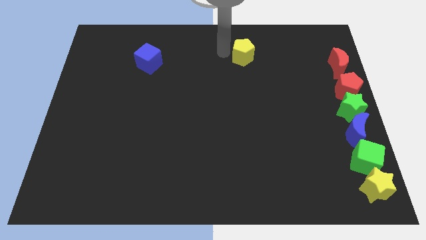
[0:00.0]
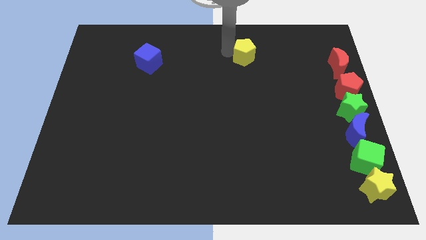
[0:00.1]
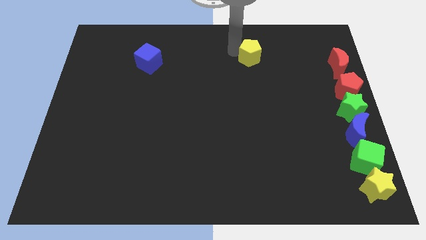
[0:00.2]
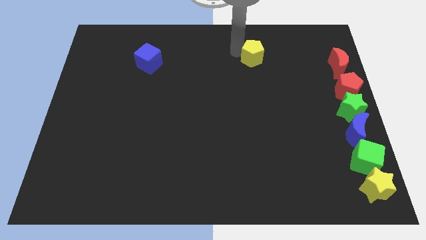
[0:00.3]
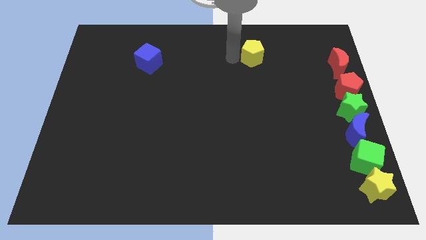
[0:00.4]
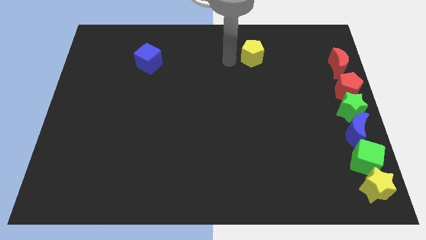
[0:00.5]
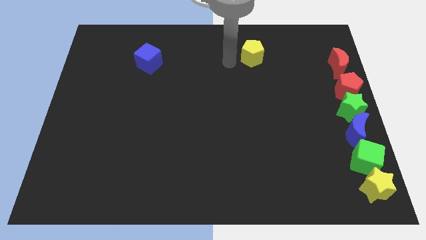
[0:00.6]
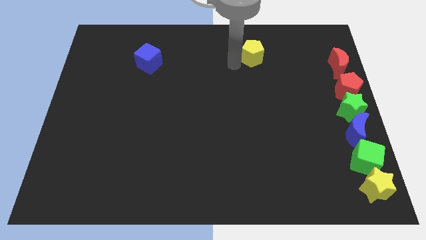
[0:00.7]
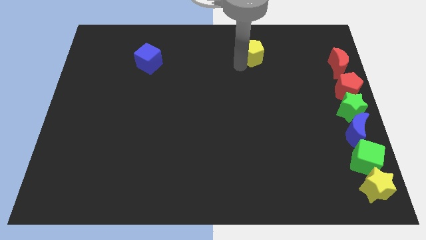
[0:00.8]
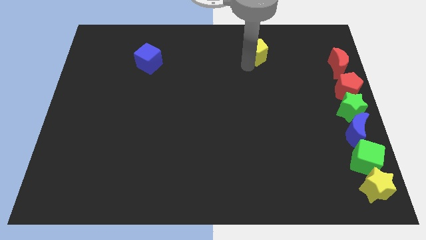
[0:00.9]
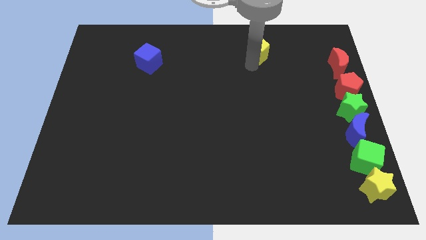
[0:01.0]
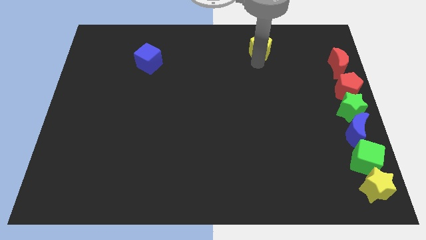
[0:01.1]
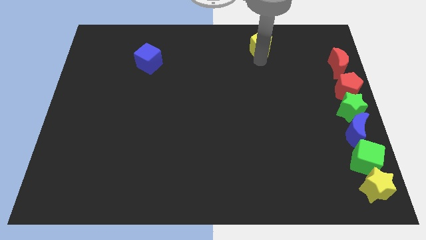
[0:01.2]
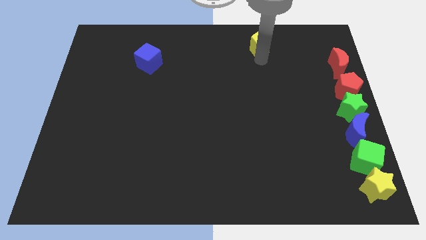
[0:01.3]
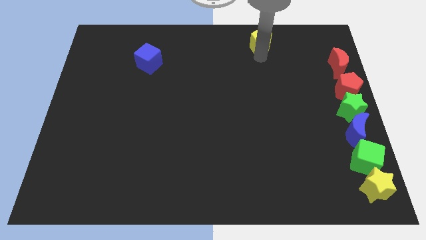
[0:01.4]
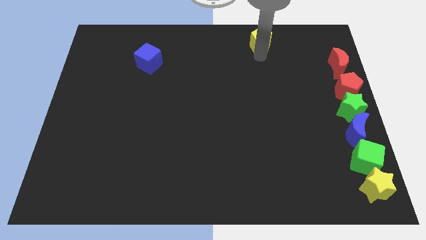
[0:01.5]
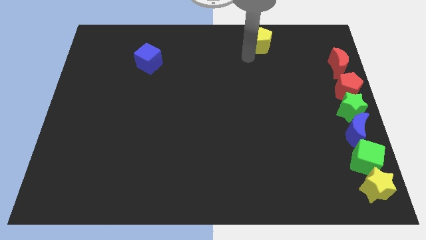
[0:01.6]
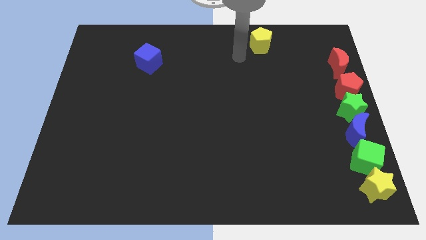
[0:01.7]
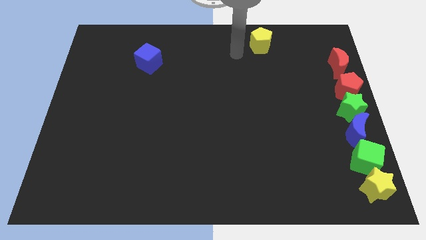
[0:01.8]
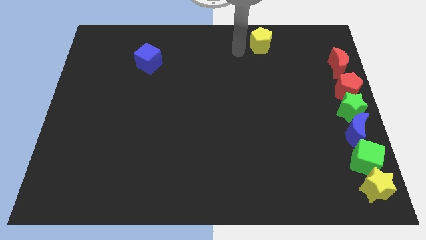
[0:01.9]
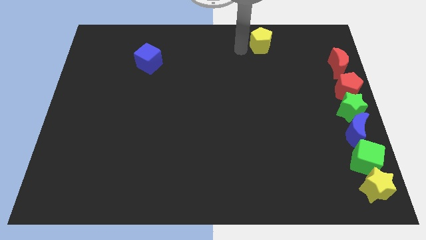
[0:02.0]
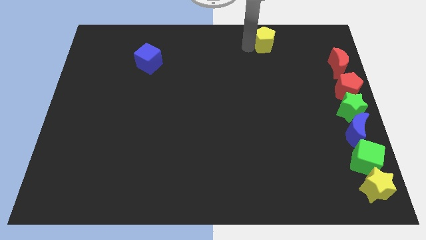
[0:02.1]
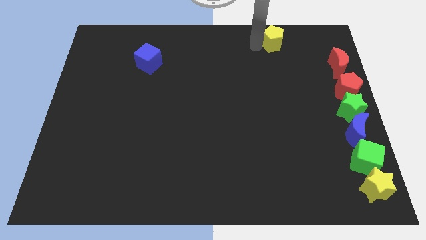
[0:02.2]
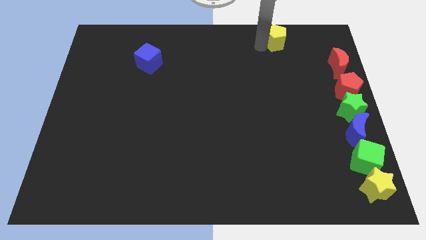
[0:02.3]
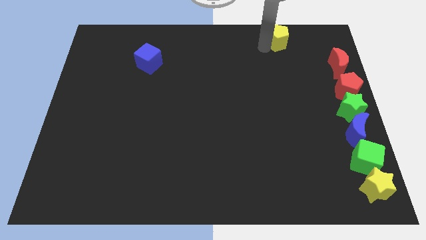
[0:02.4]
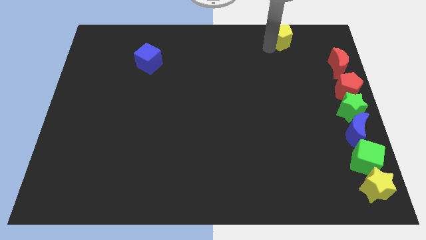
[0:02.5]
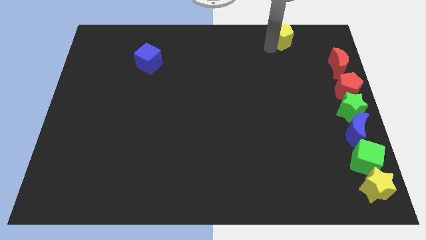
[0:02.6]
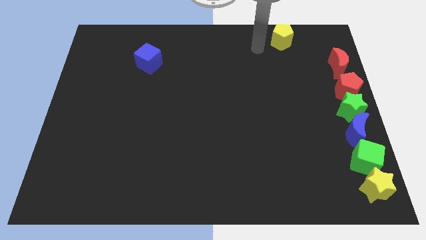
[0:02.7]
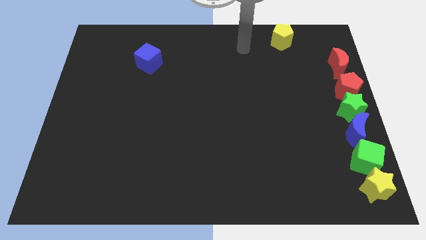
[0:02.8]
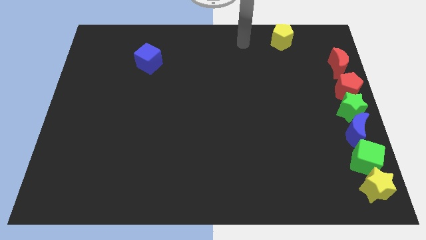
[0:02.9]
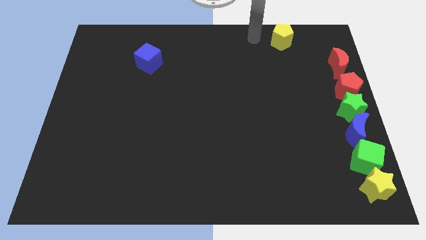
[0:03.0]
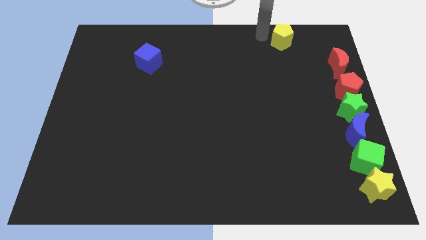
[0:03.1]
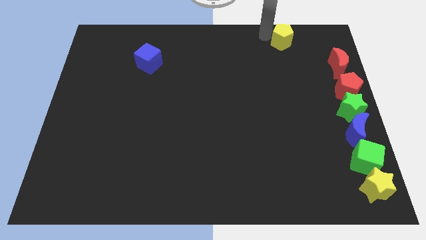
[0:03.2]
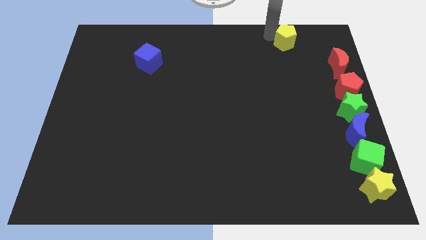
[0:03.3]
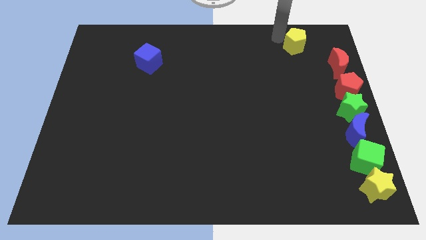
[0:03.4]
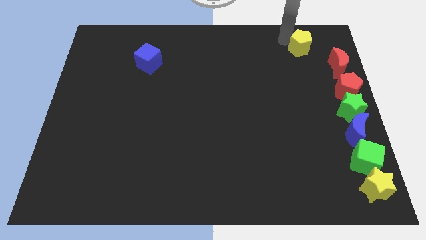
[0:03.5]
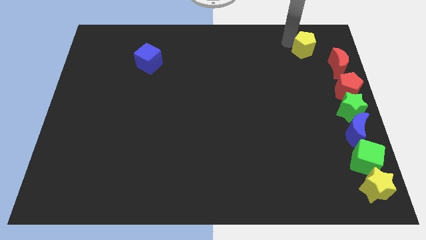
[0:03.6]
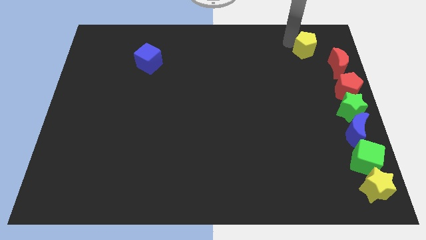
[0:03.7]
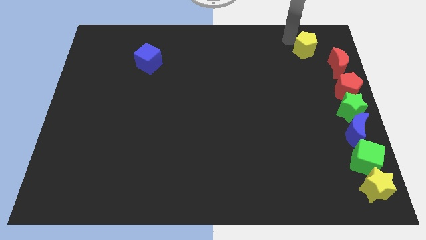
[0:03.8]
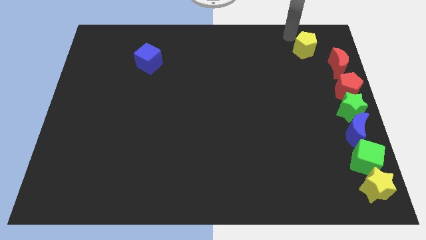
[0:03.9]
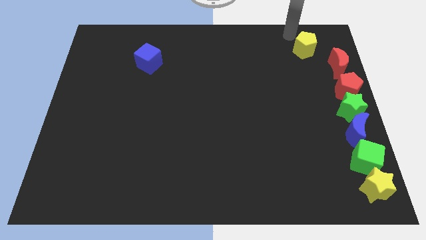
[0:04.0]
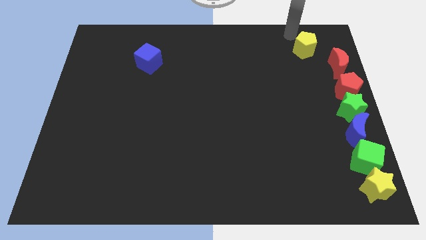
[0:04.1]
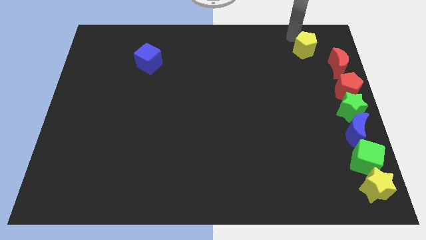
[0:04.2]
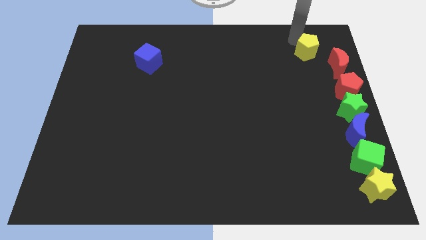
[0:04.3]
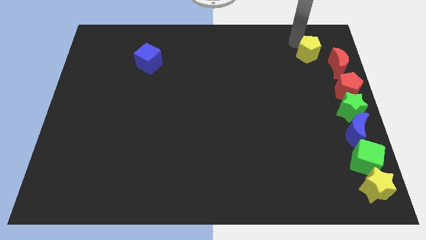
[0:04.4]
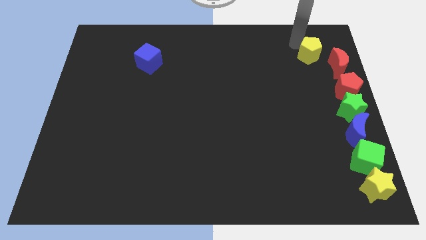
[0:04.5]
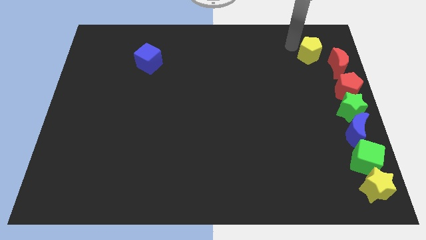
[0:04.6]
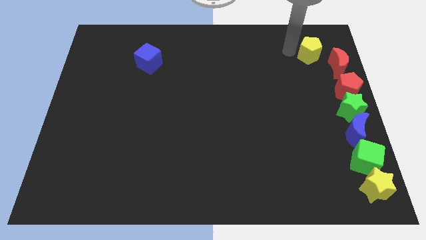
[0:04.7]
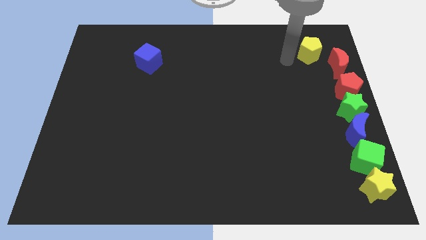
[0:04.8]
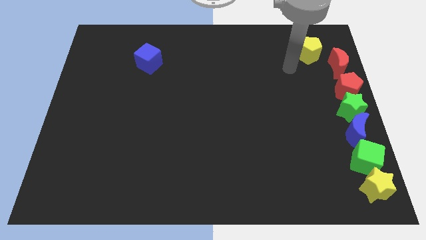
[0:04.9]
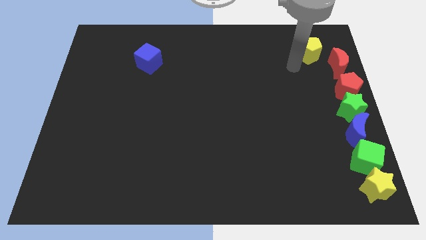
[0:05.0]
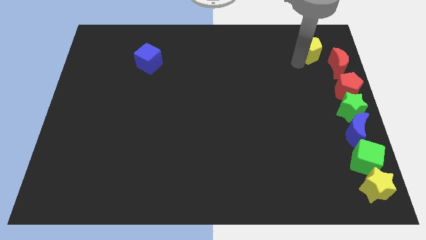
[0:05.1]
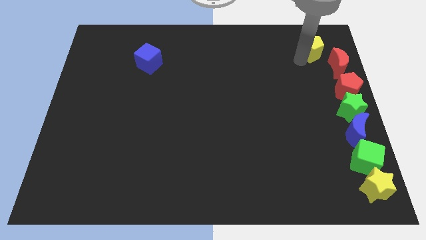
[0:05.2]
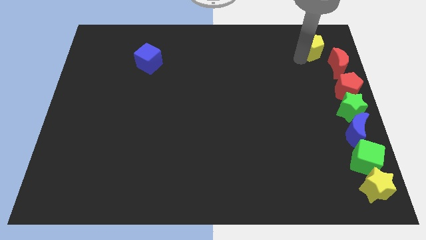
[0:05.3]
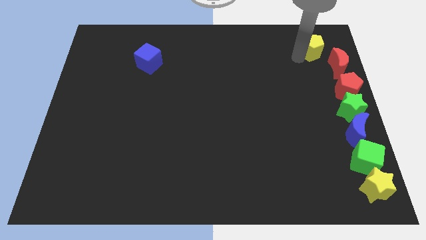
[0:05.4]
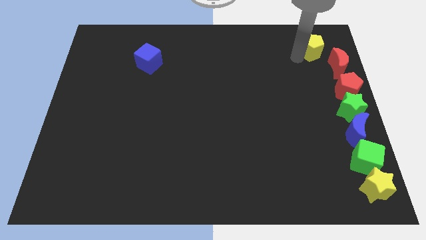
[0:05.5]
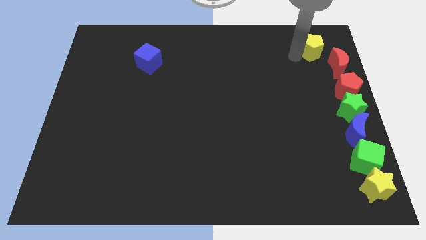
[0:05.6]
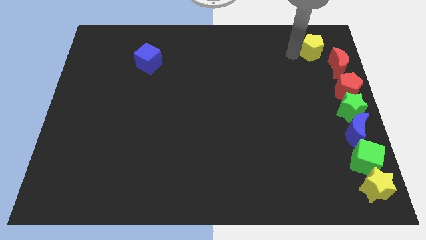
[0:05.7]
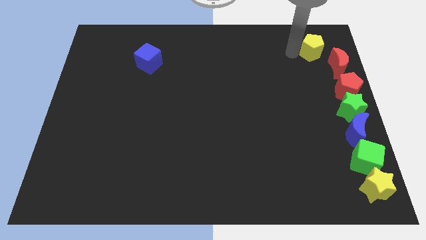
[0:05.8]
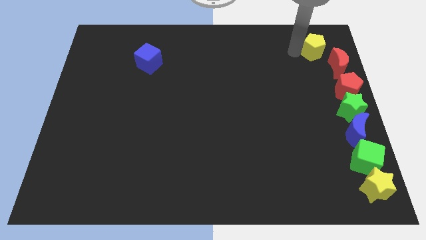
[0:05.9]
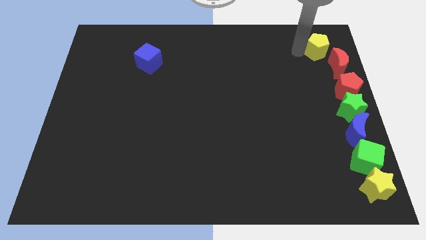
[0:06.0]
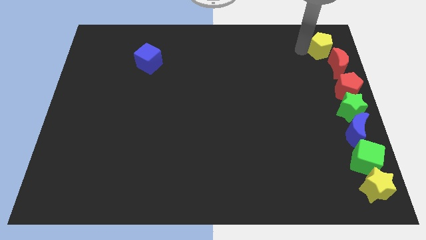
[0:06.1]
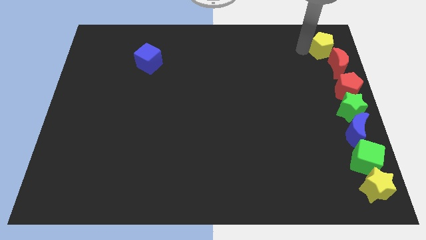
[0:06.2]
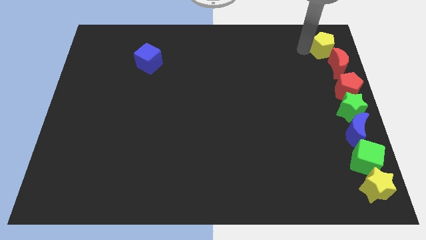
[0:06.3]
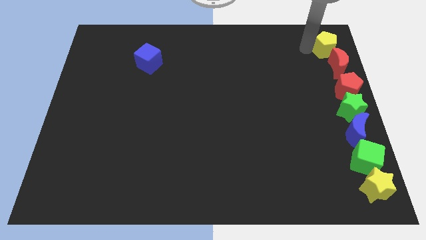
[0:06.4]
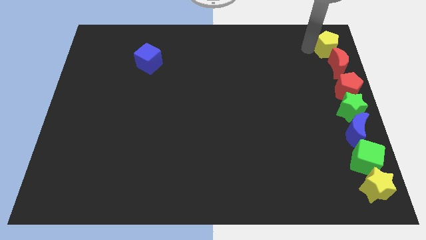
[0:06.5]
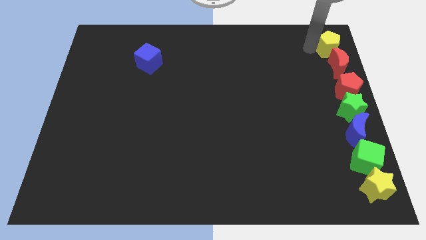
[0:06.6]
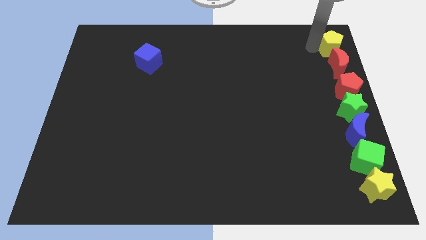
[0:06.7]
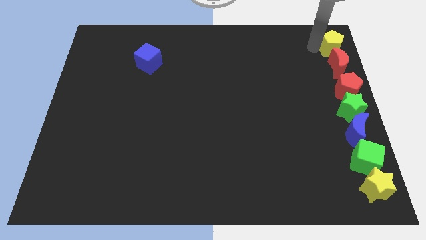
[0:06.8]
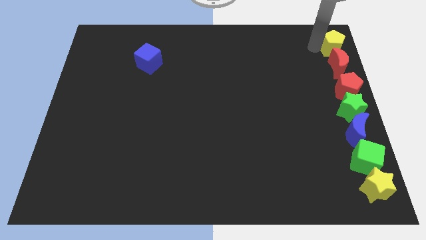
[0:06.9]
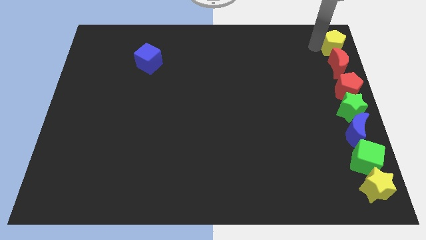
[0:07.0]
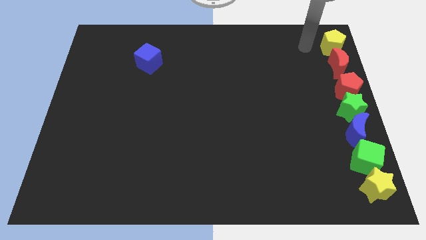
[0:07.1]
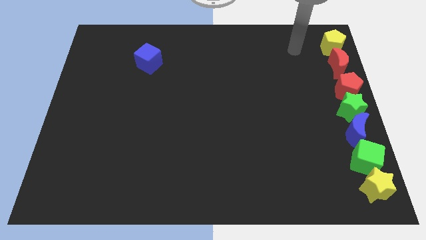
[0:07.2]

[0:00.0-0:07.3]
place yellow pentagon above the red crescent

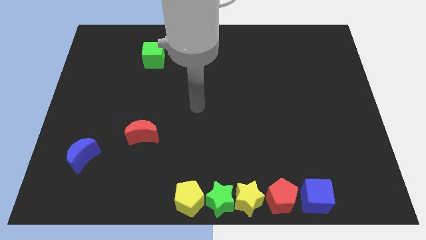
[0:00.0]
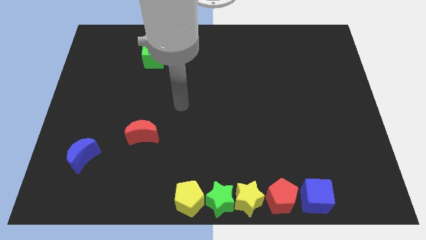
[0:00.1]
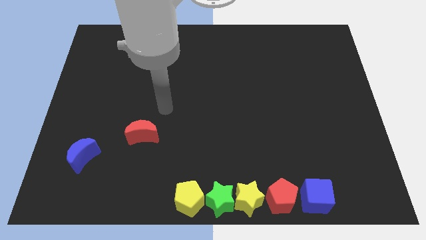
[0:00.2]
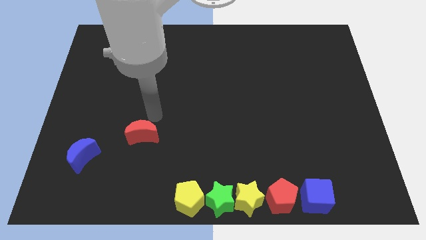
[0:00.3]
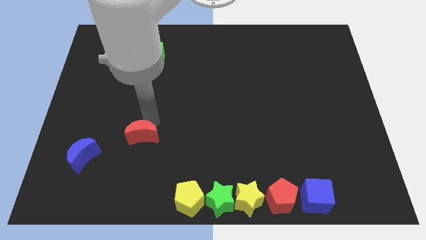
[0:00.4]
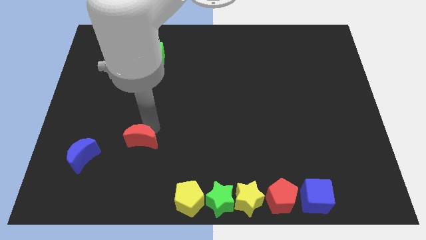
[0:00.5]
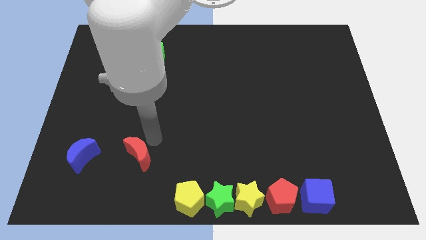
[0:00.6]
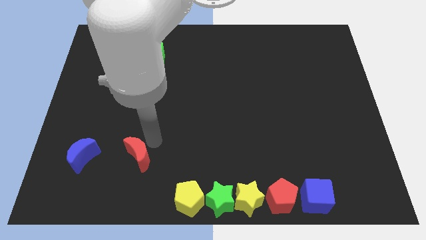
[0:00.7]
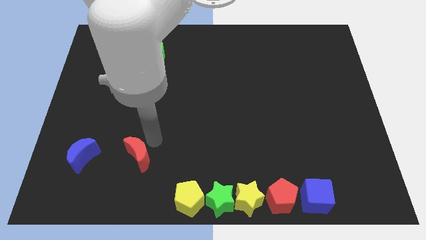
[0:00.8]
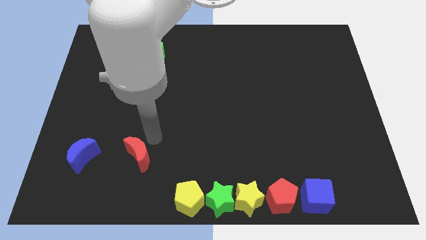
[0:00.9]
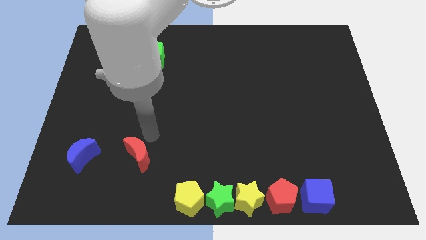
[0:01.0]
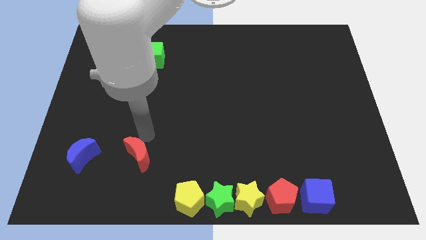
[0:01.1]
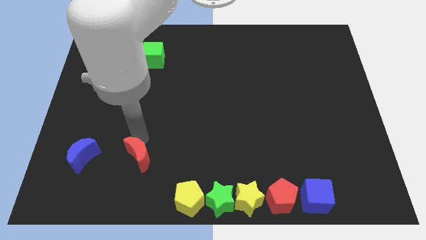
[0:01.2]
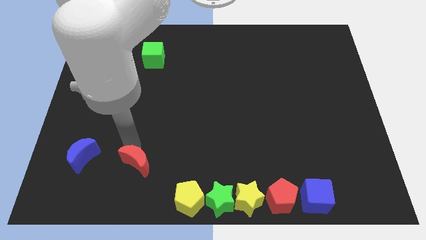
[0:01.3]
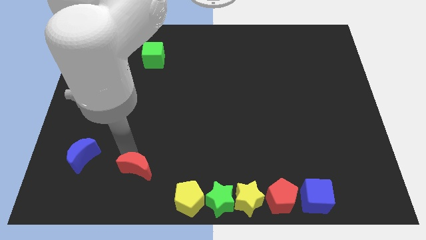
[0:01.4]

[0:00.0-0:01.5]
move the red moon slightly to the bottom

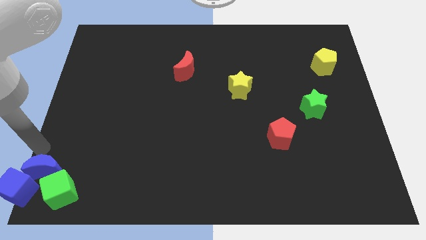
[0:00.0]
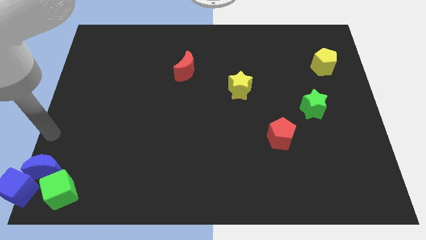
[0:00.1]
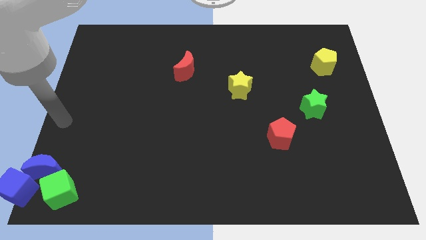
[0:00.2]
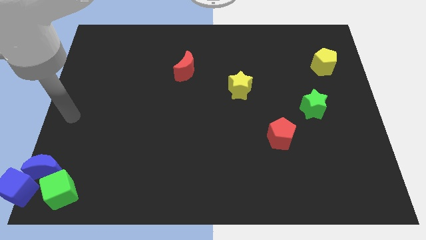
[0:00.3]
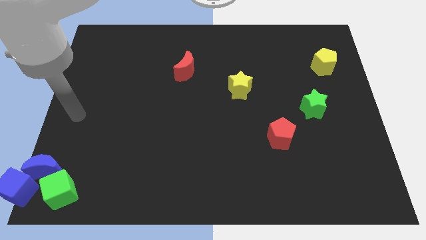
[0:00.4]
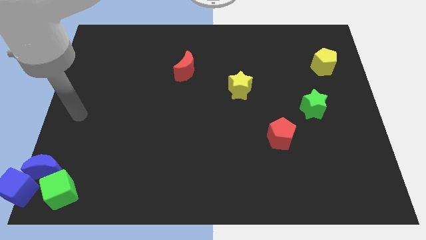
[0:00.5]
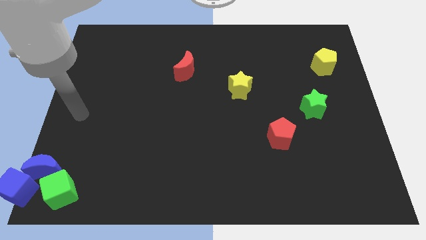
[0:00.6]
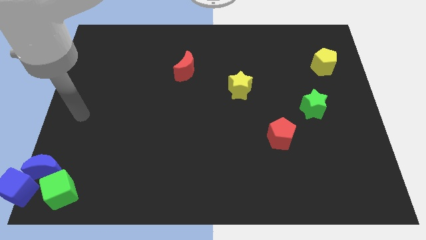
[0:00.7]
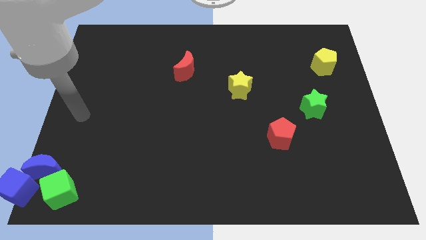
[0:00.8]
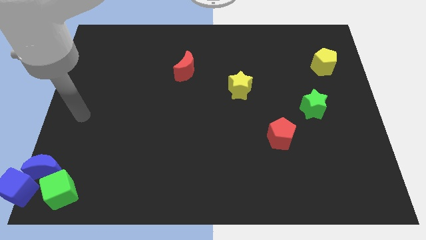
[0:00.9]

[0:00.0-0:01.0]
move your arm to the center left
